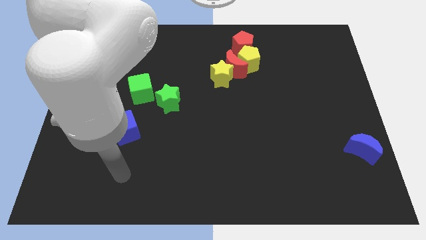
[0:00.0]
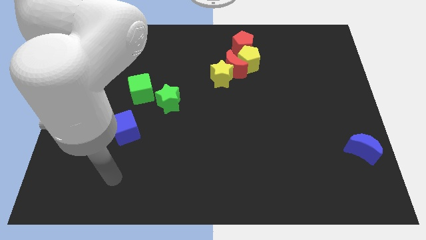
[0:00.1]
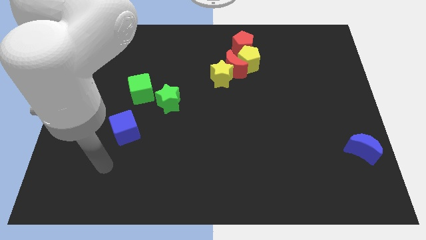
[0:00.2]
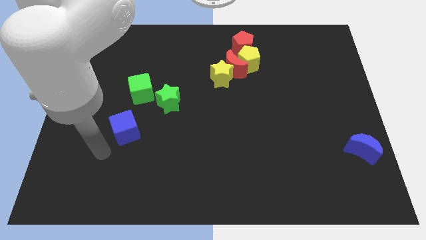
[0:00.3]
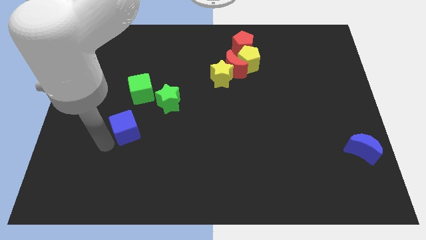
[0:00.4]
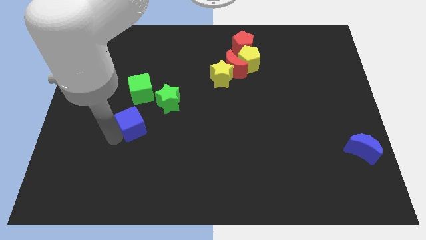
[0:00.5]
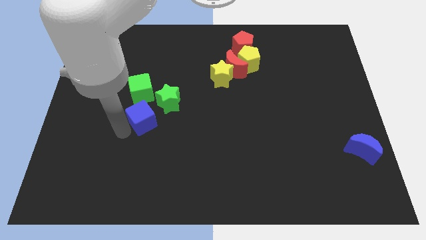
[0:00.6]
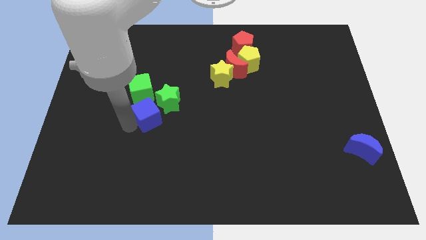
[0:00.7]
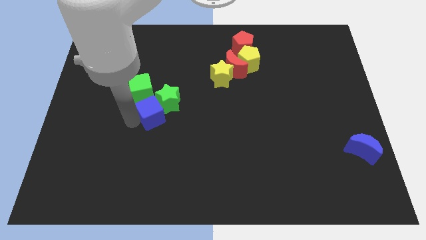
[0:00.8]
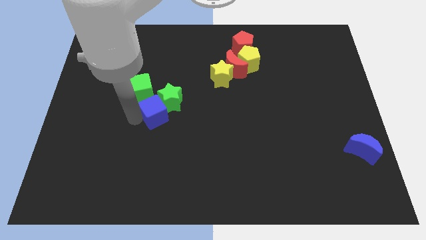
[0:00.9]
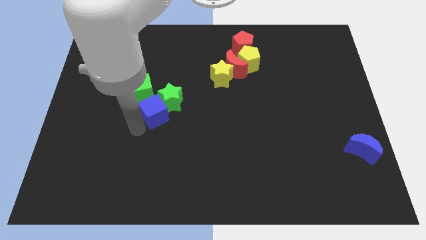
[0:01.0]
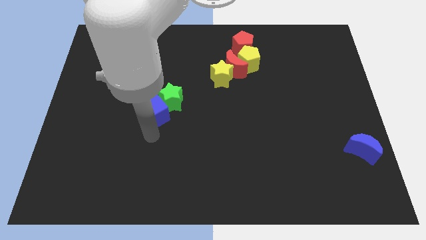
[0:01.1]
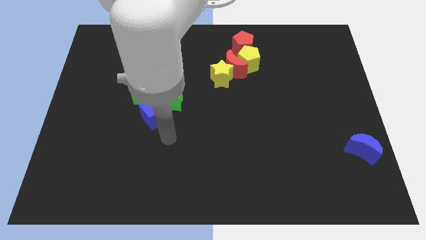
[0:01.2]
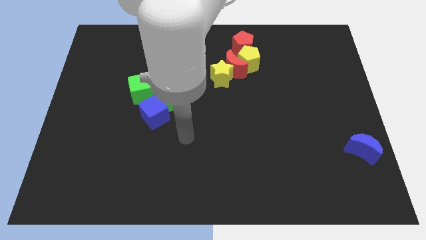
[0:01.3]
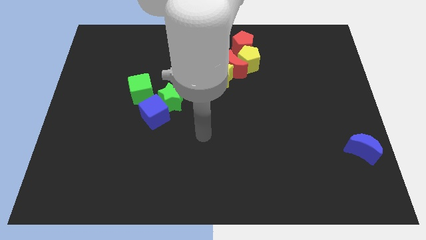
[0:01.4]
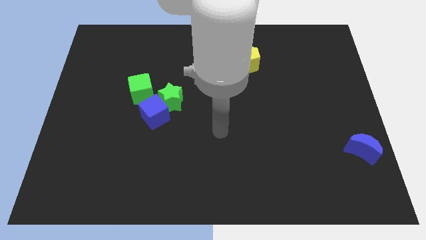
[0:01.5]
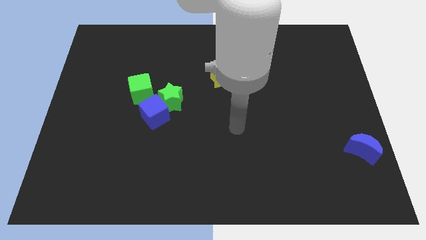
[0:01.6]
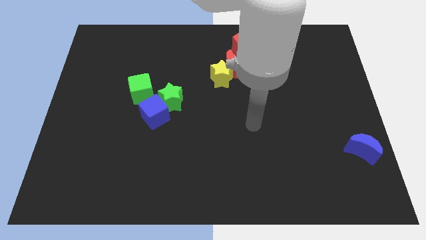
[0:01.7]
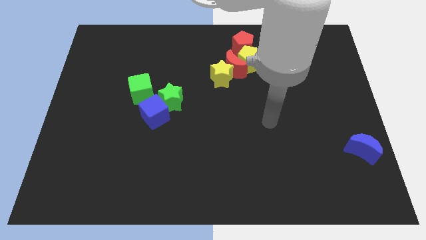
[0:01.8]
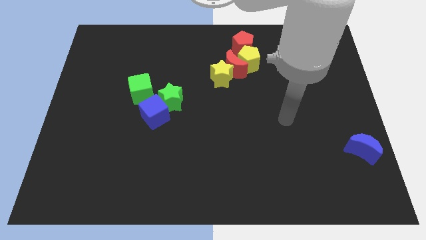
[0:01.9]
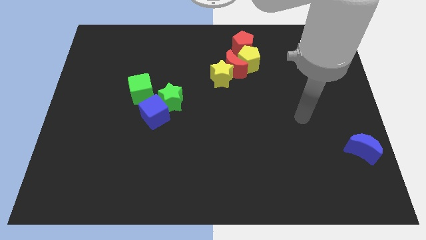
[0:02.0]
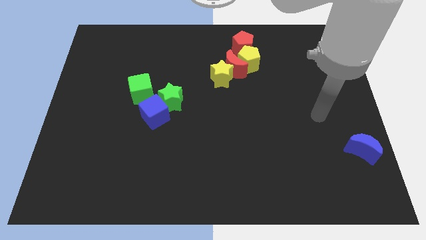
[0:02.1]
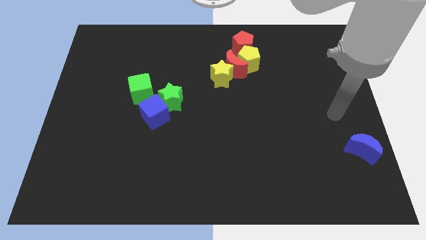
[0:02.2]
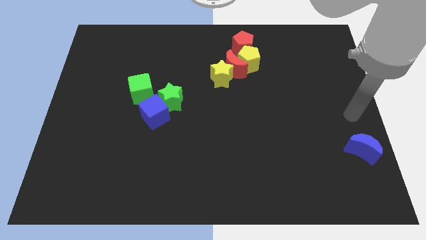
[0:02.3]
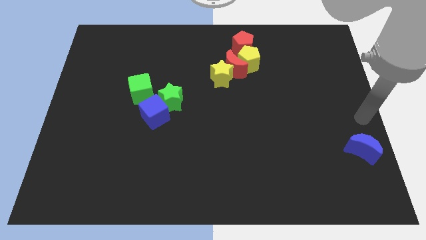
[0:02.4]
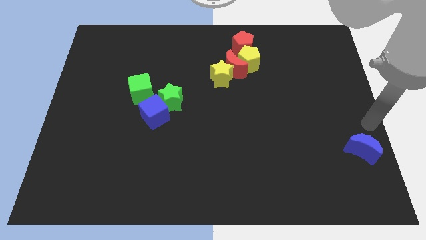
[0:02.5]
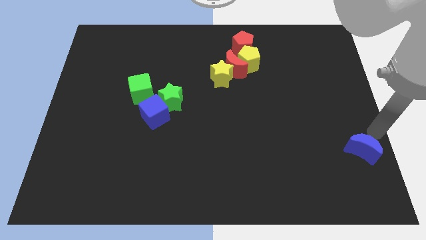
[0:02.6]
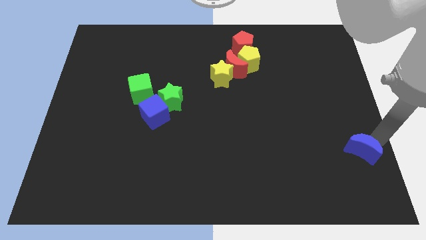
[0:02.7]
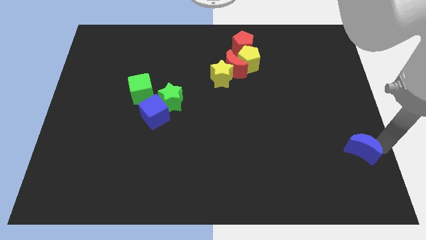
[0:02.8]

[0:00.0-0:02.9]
push the blue cube into green star

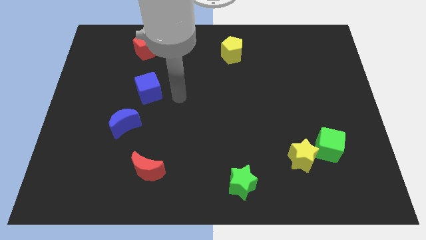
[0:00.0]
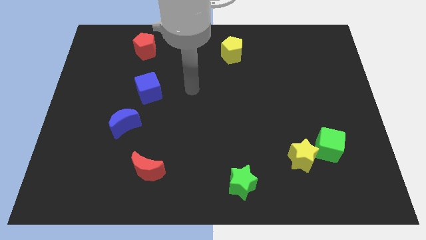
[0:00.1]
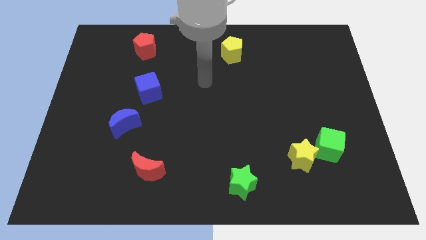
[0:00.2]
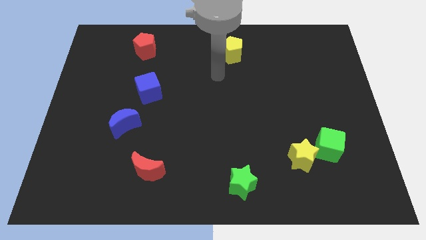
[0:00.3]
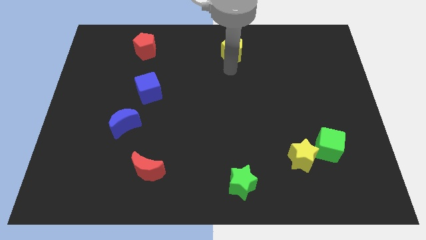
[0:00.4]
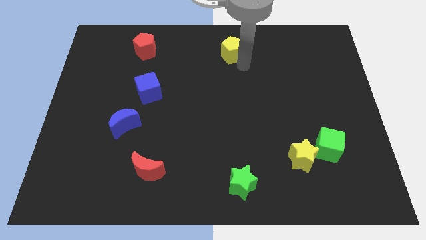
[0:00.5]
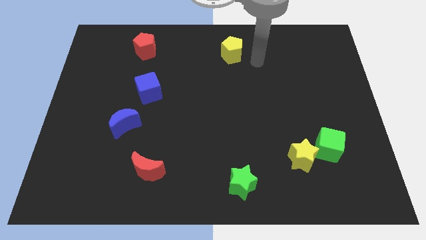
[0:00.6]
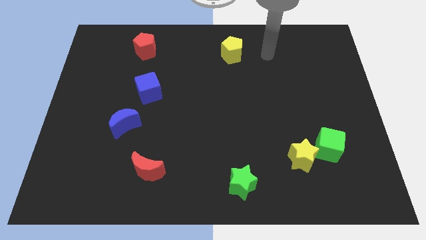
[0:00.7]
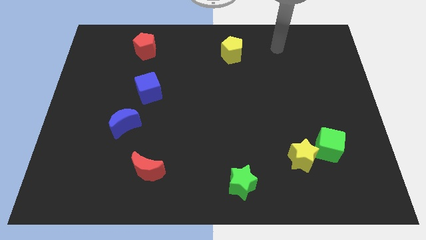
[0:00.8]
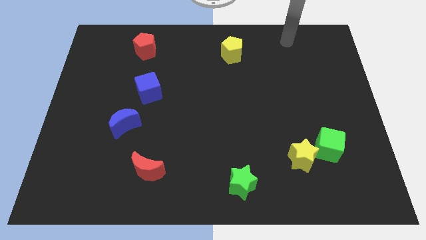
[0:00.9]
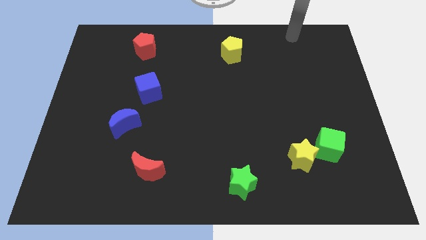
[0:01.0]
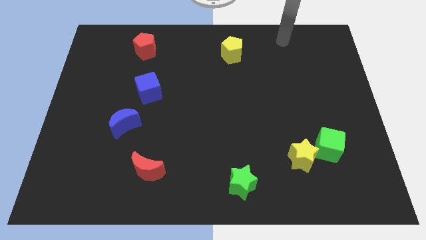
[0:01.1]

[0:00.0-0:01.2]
move your arm towards the top of the board

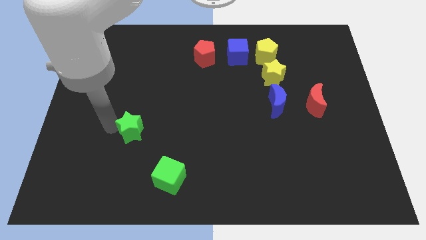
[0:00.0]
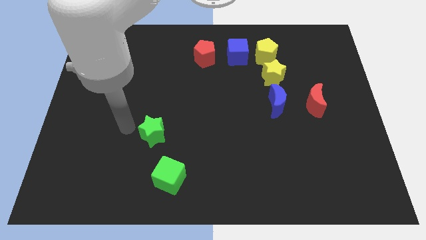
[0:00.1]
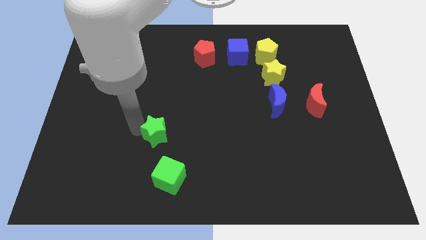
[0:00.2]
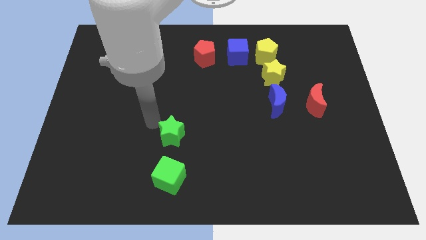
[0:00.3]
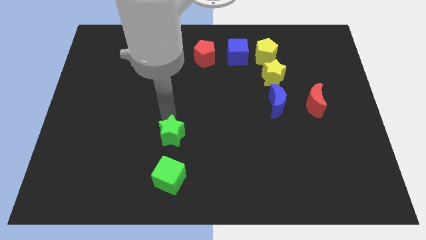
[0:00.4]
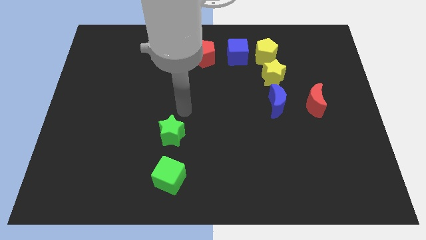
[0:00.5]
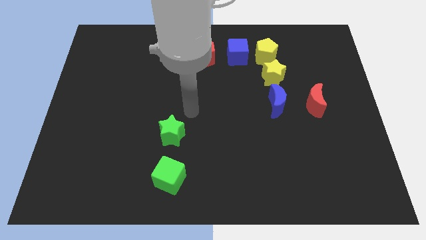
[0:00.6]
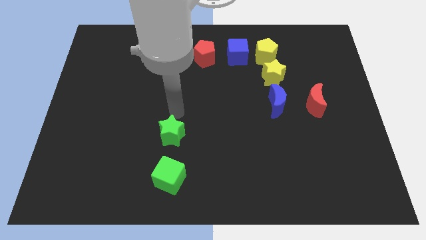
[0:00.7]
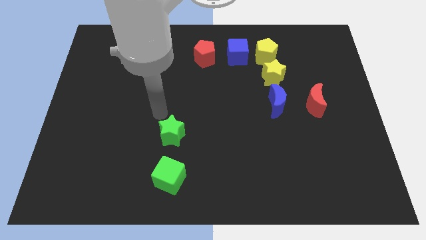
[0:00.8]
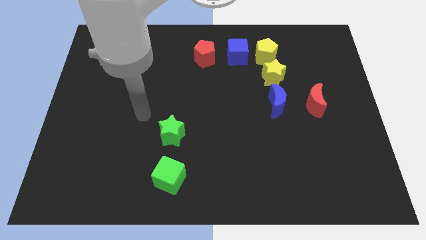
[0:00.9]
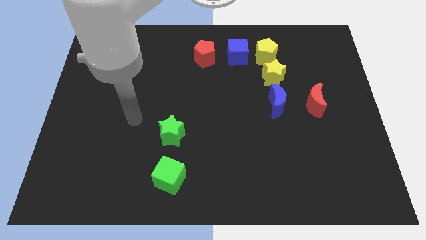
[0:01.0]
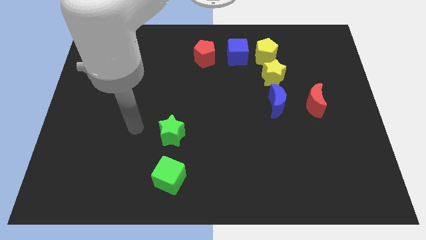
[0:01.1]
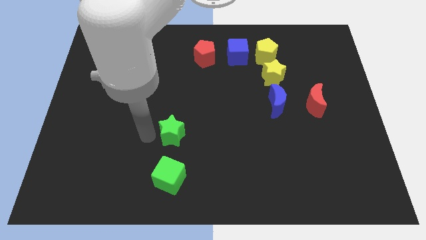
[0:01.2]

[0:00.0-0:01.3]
slide the green star above the green cube

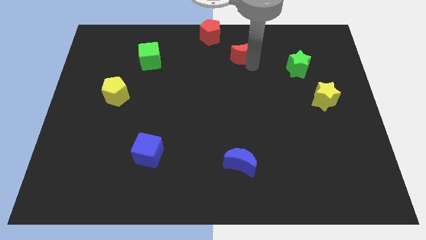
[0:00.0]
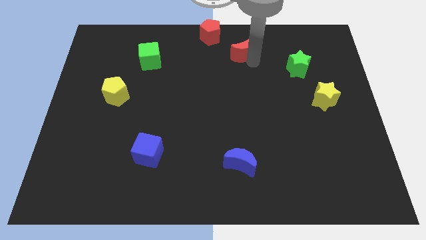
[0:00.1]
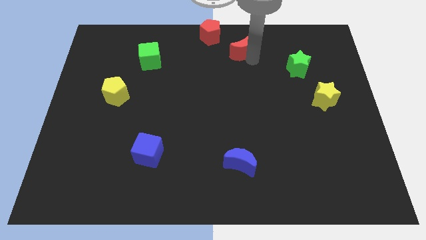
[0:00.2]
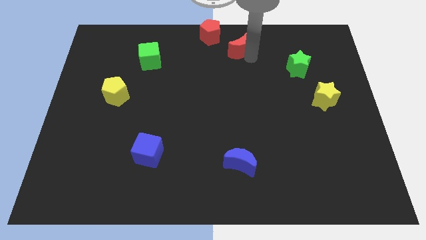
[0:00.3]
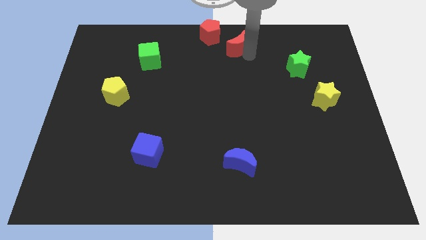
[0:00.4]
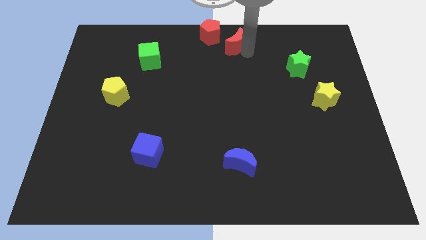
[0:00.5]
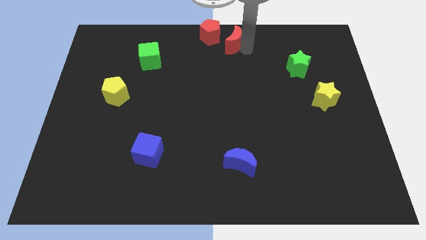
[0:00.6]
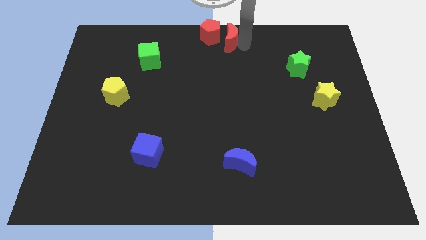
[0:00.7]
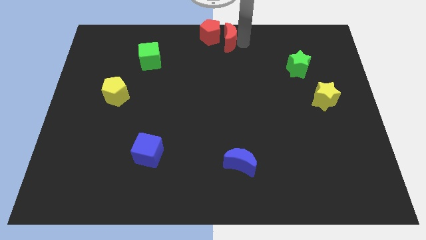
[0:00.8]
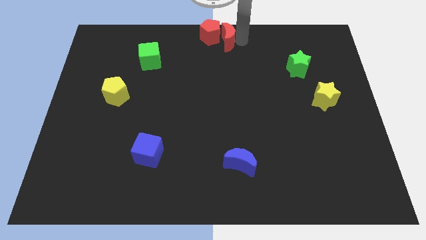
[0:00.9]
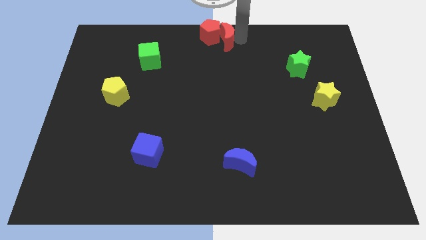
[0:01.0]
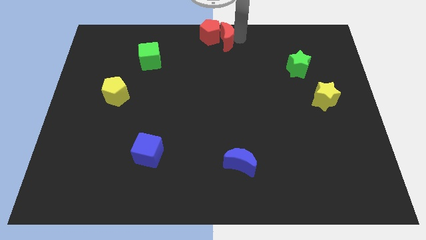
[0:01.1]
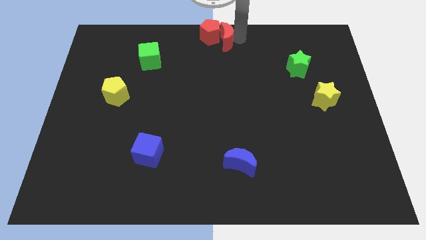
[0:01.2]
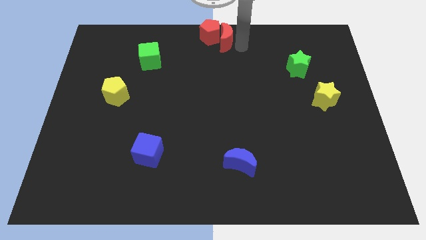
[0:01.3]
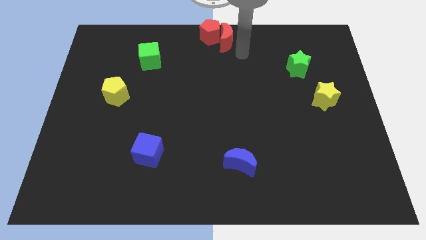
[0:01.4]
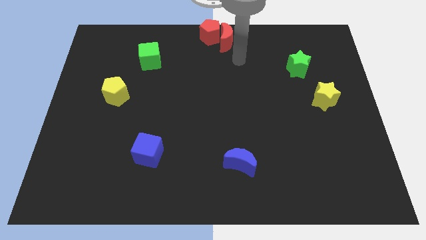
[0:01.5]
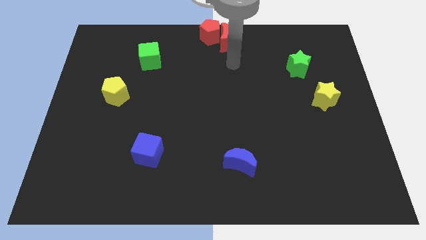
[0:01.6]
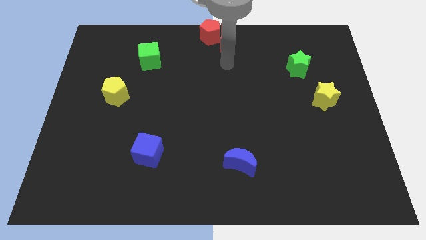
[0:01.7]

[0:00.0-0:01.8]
push the red crescent into the red pentagon

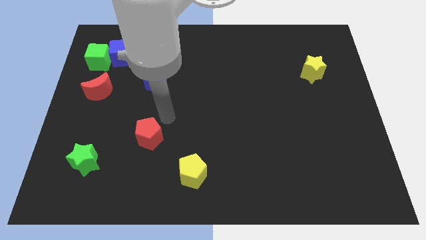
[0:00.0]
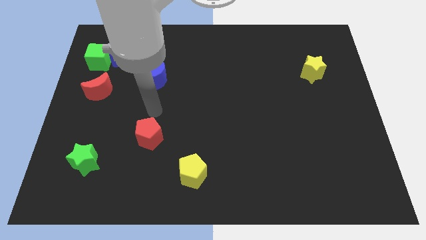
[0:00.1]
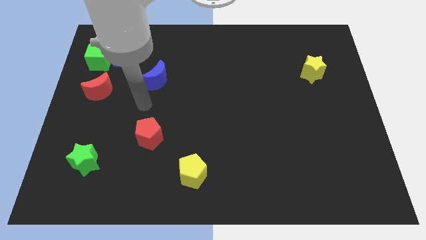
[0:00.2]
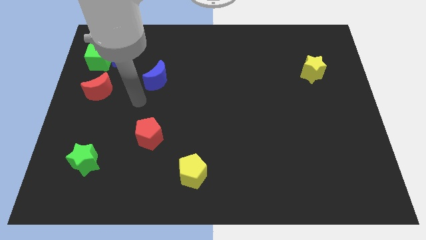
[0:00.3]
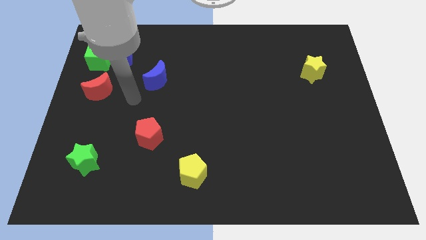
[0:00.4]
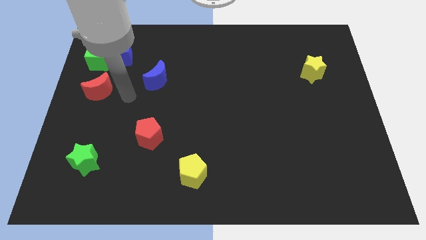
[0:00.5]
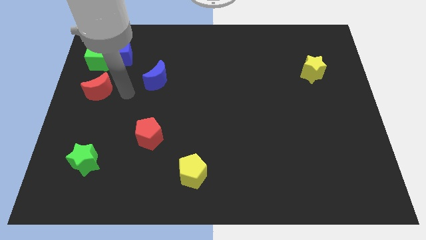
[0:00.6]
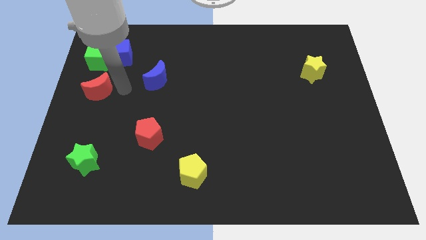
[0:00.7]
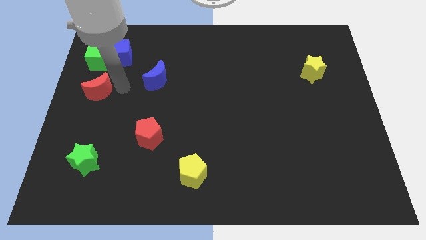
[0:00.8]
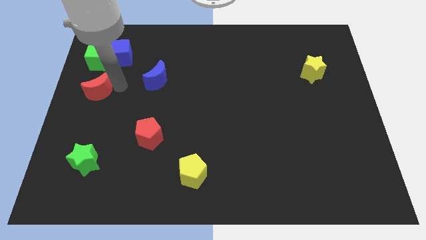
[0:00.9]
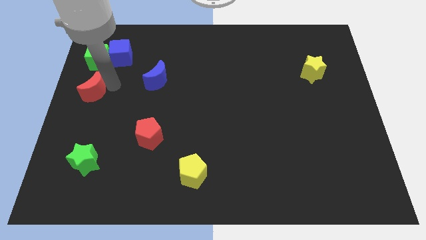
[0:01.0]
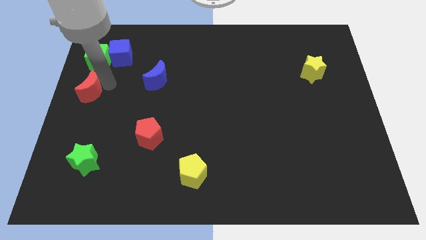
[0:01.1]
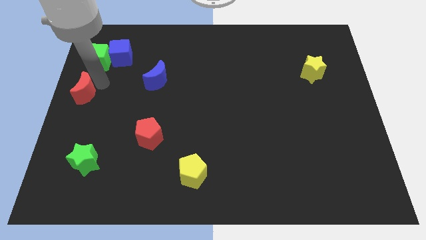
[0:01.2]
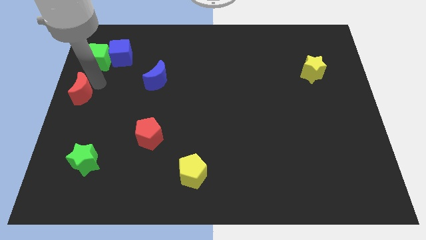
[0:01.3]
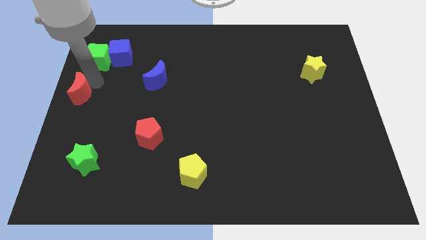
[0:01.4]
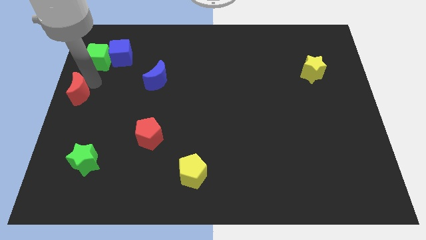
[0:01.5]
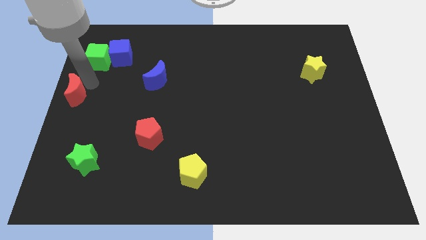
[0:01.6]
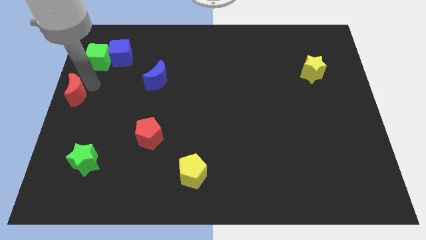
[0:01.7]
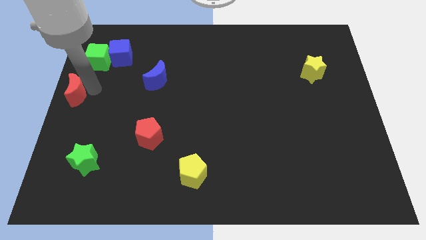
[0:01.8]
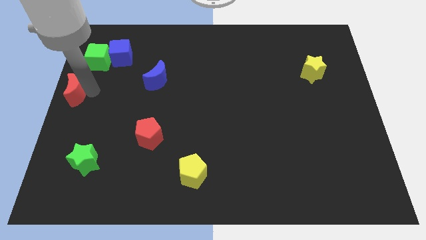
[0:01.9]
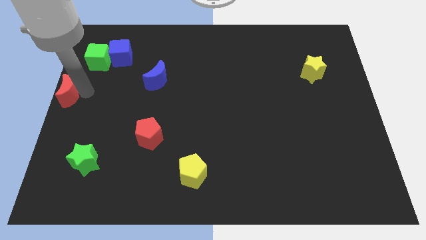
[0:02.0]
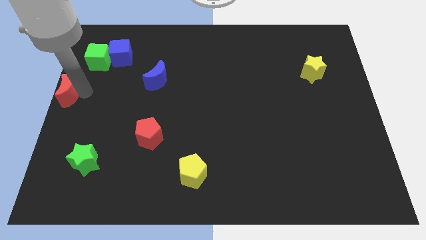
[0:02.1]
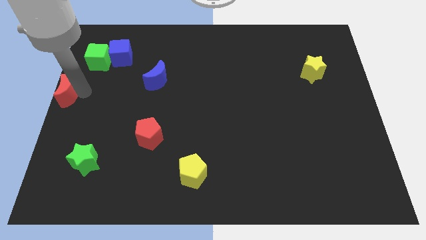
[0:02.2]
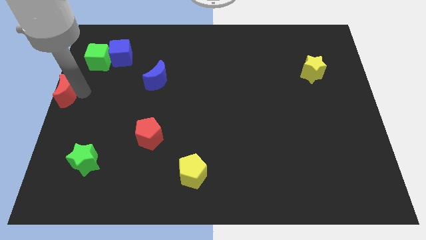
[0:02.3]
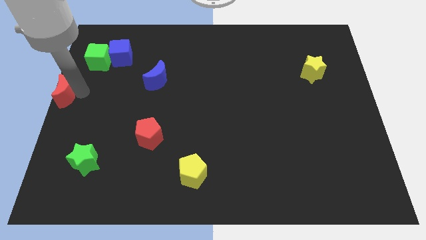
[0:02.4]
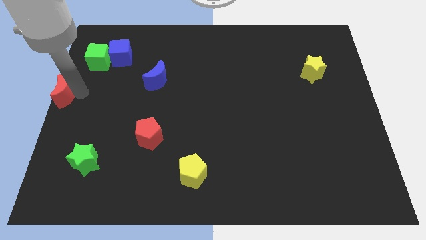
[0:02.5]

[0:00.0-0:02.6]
push the red moon to the left side of the board
